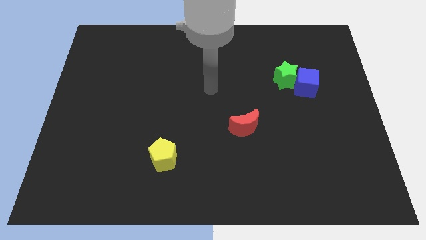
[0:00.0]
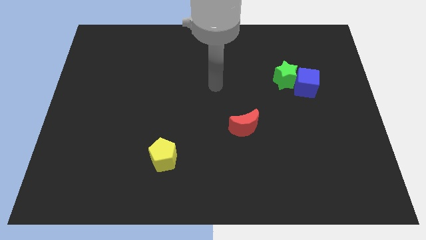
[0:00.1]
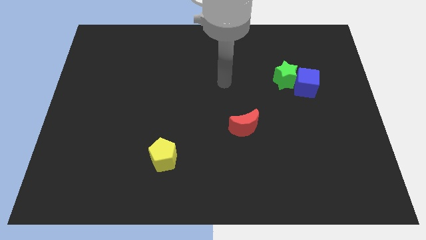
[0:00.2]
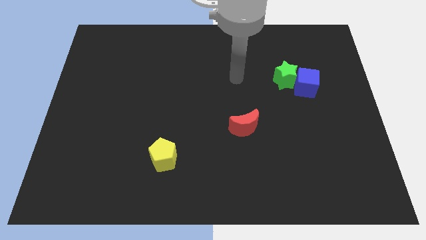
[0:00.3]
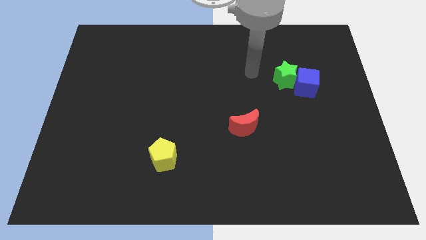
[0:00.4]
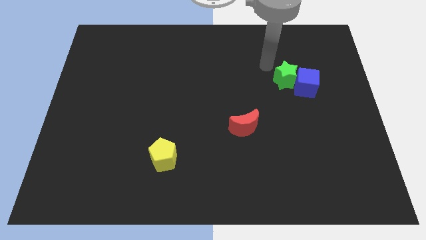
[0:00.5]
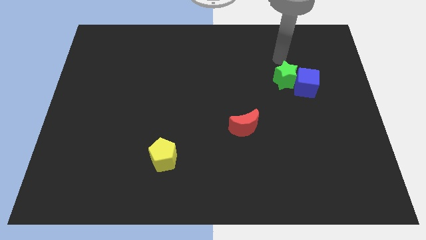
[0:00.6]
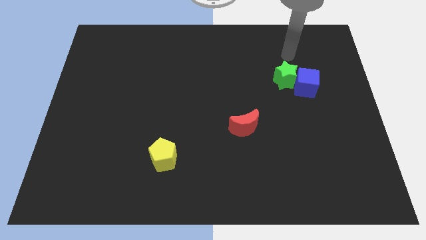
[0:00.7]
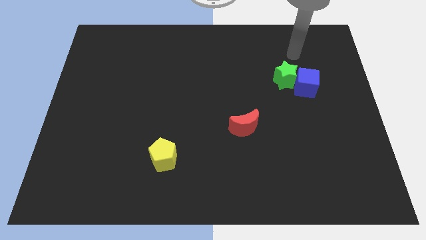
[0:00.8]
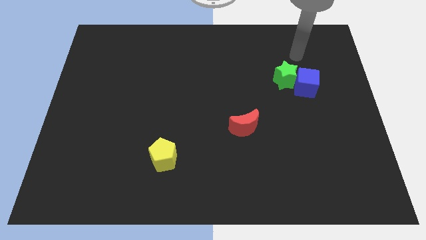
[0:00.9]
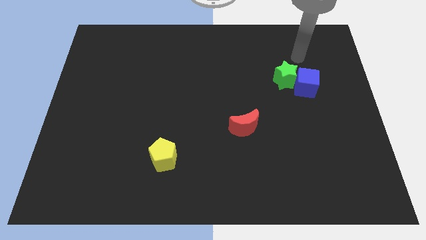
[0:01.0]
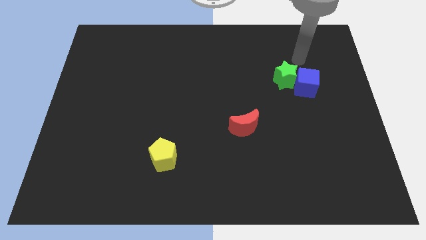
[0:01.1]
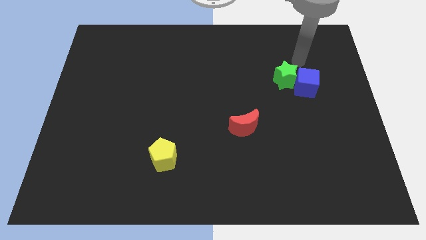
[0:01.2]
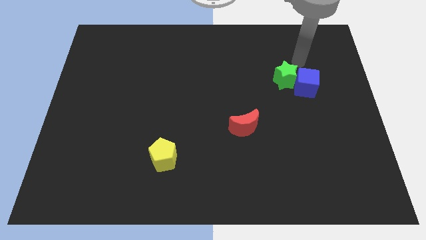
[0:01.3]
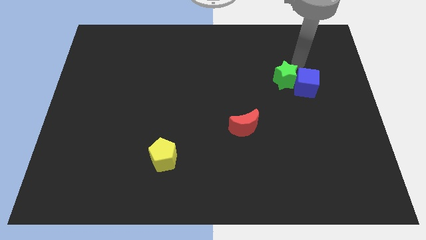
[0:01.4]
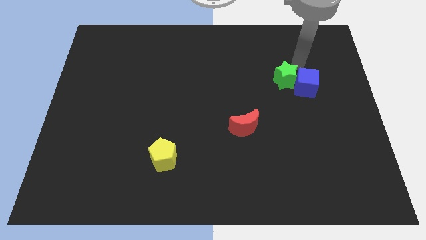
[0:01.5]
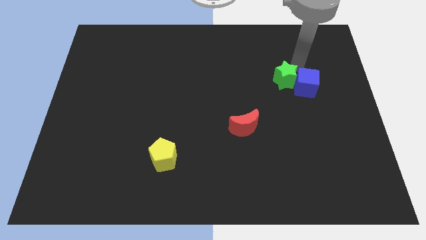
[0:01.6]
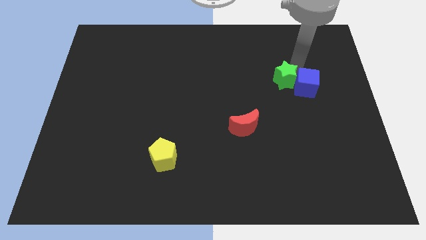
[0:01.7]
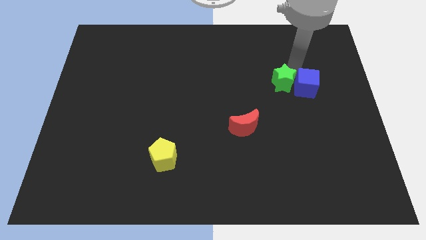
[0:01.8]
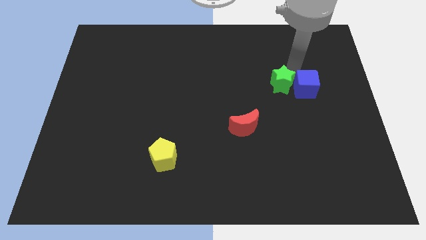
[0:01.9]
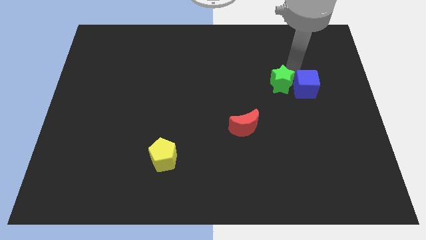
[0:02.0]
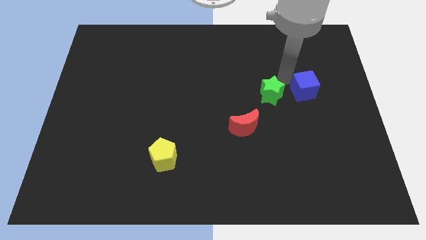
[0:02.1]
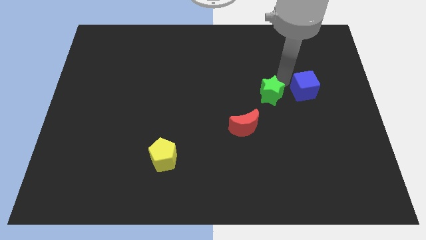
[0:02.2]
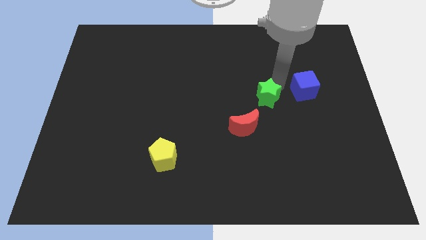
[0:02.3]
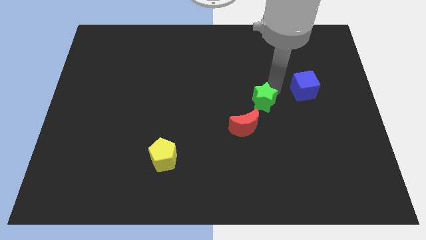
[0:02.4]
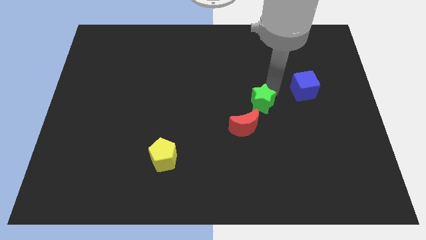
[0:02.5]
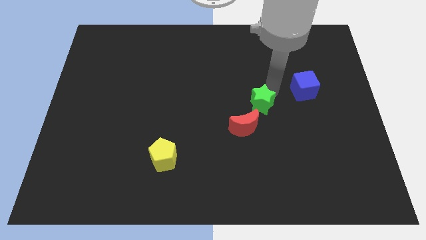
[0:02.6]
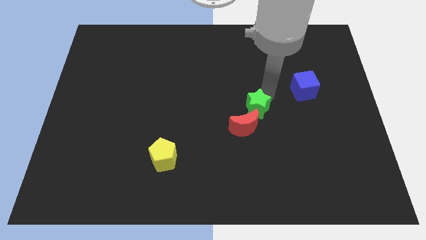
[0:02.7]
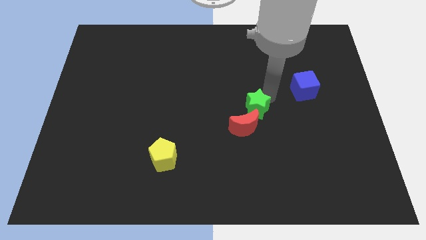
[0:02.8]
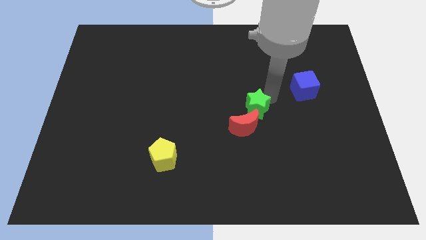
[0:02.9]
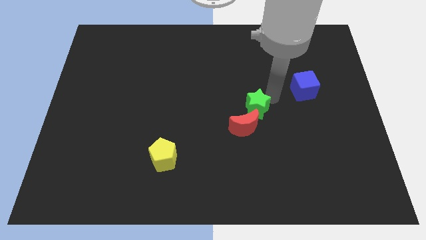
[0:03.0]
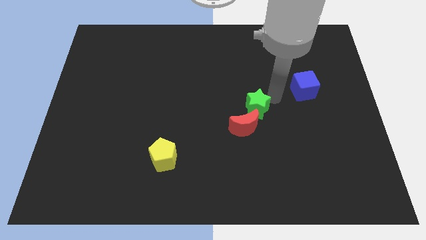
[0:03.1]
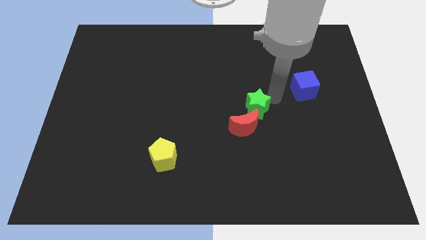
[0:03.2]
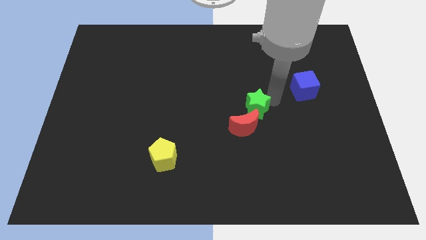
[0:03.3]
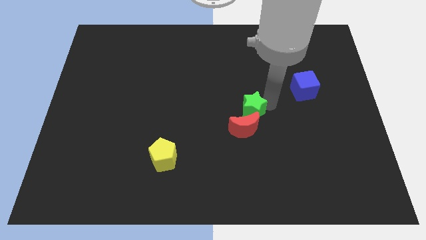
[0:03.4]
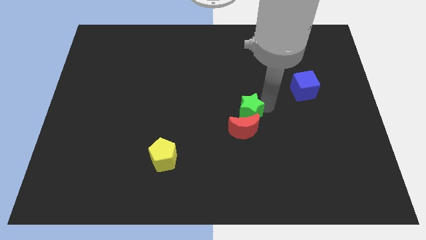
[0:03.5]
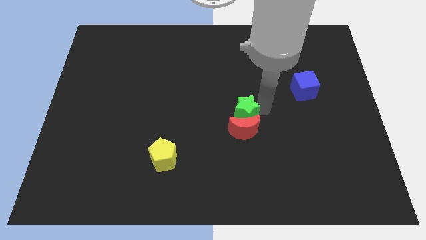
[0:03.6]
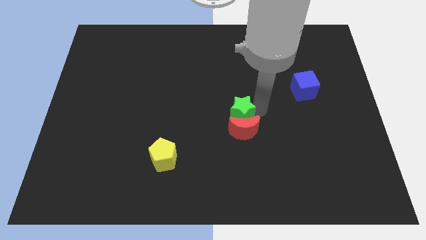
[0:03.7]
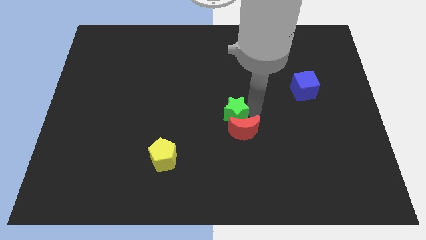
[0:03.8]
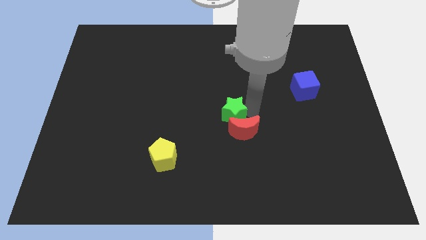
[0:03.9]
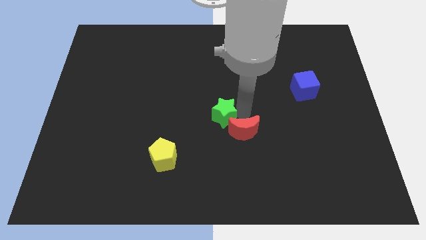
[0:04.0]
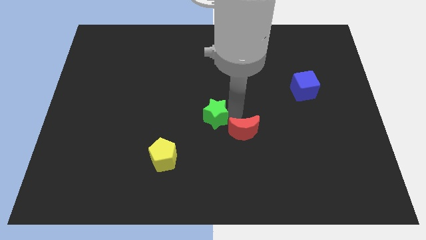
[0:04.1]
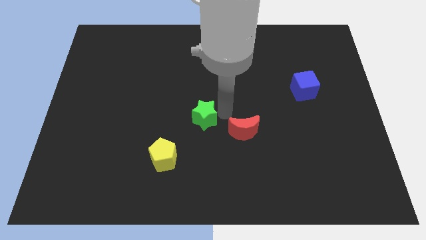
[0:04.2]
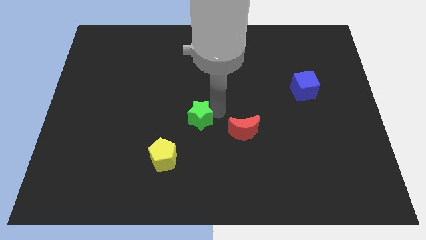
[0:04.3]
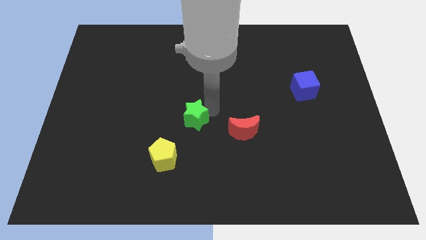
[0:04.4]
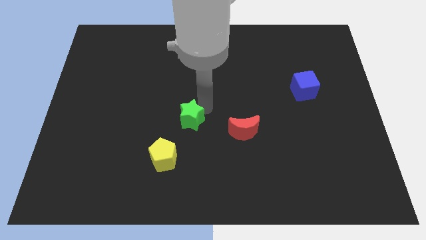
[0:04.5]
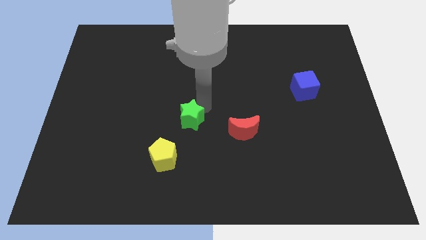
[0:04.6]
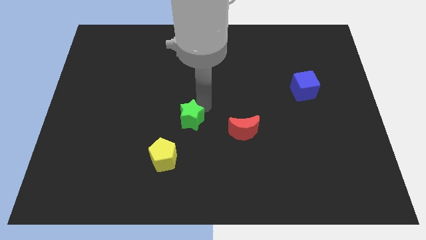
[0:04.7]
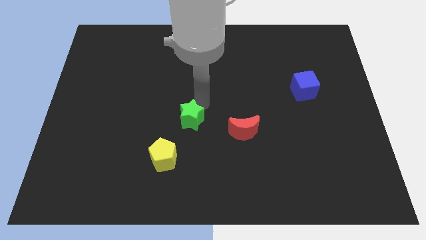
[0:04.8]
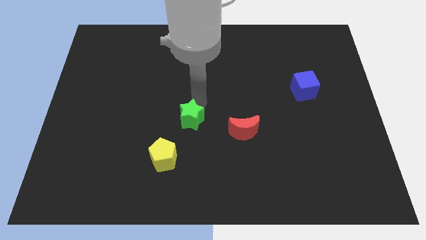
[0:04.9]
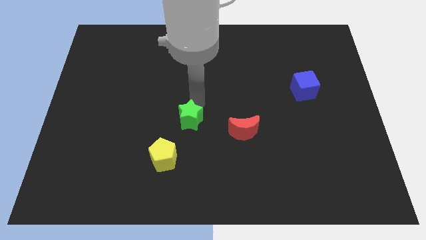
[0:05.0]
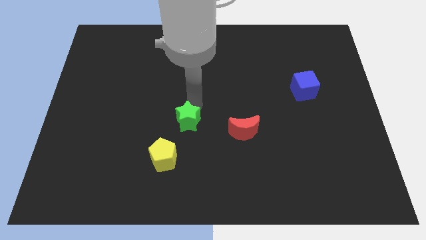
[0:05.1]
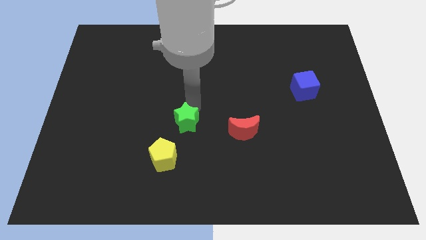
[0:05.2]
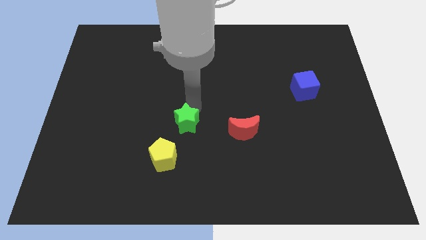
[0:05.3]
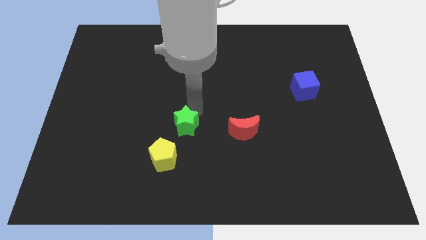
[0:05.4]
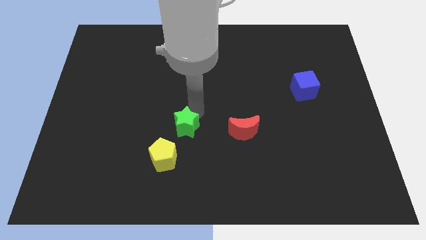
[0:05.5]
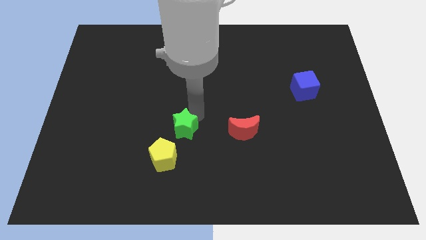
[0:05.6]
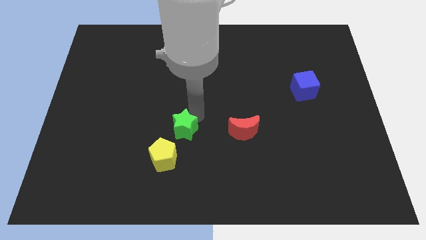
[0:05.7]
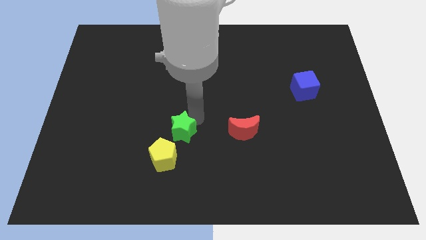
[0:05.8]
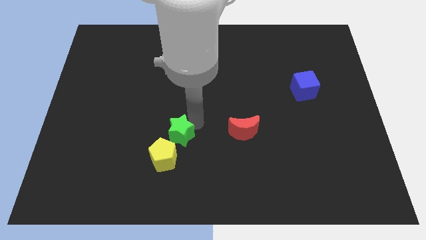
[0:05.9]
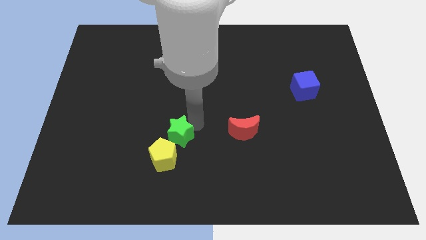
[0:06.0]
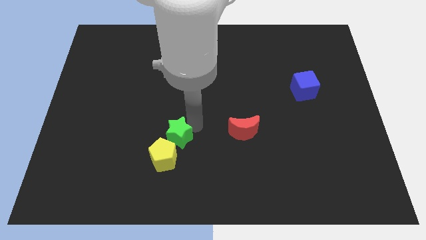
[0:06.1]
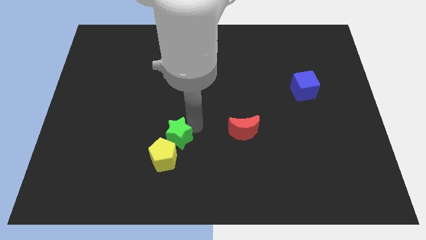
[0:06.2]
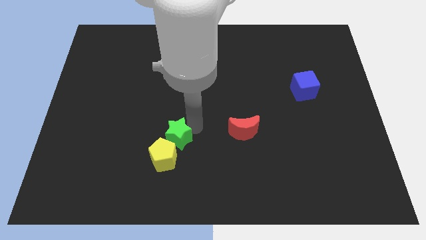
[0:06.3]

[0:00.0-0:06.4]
slide the green block to the yellow block

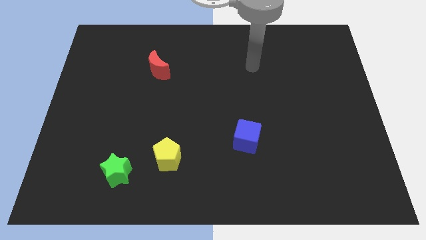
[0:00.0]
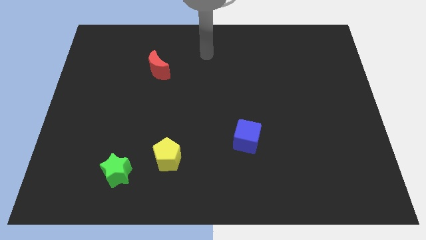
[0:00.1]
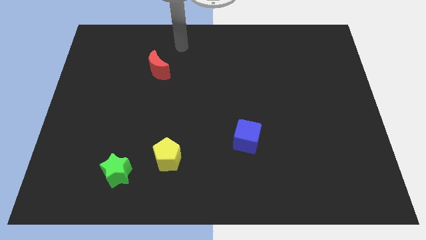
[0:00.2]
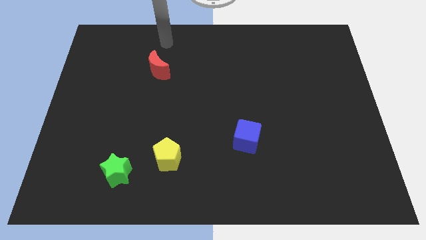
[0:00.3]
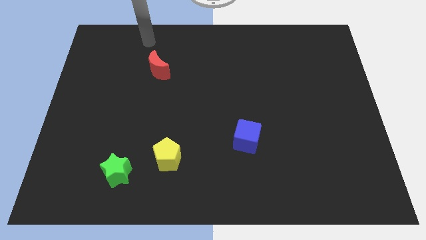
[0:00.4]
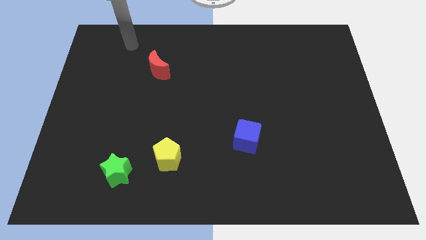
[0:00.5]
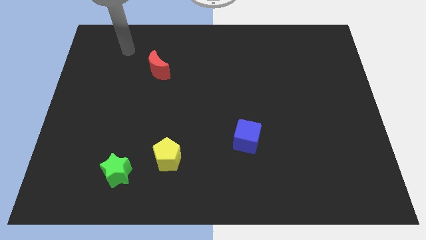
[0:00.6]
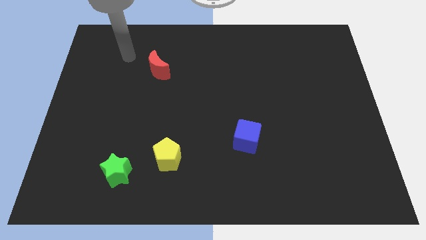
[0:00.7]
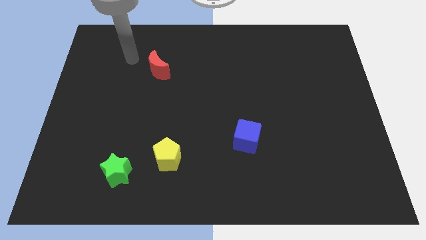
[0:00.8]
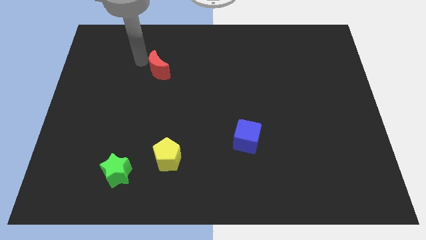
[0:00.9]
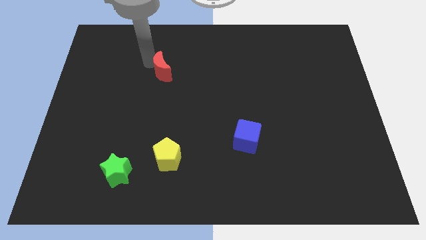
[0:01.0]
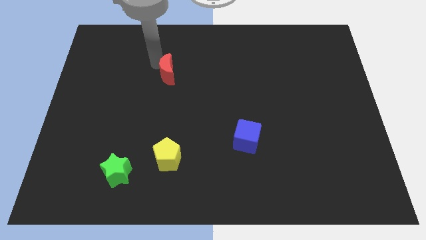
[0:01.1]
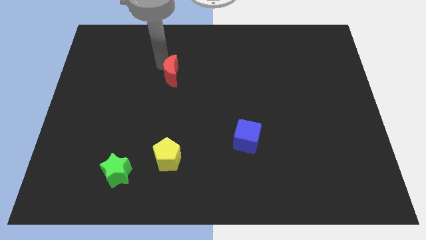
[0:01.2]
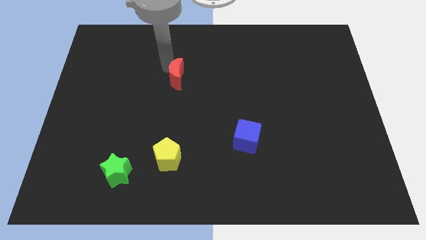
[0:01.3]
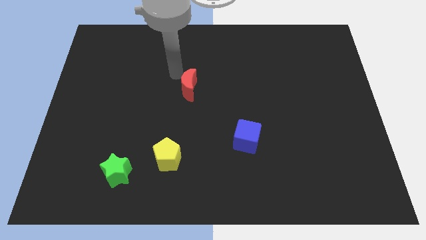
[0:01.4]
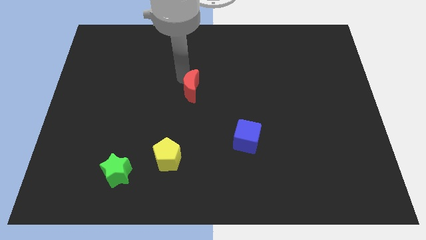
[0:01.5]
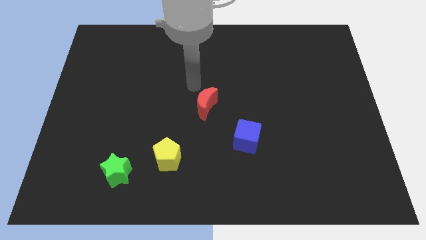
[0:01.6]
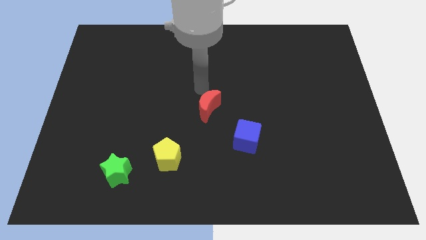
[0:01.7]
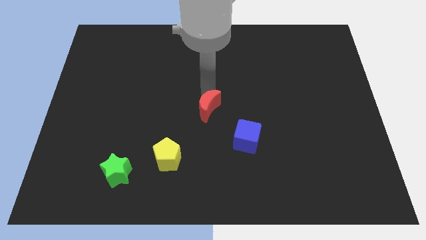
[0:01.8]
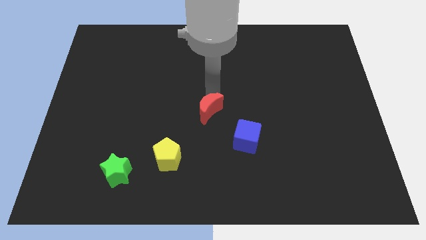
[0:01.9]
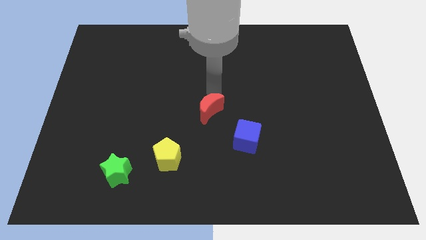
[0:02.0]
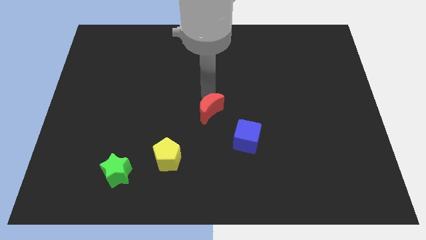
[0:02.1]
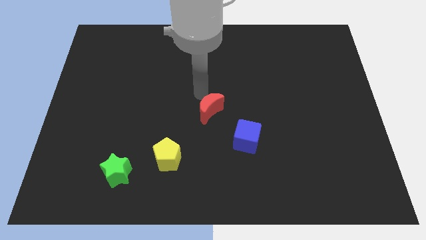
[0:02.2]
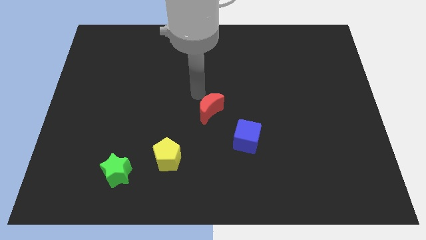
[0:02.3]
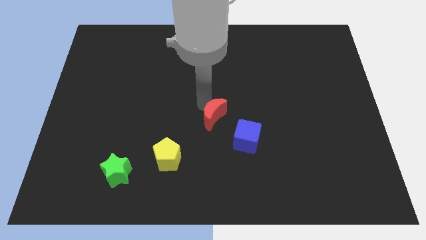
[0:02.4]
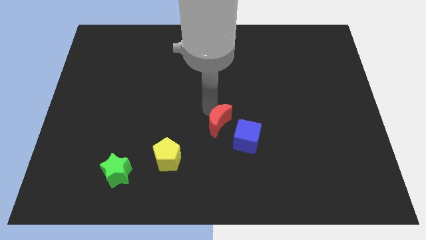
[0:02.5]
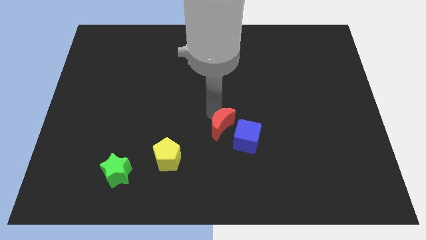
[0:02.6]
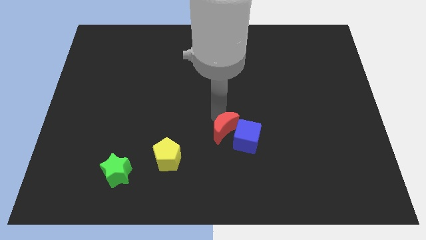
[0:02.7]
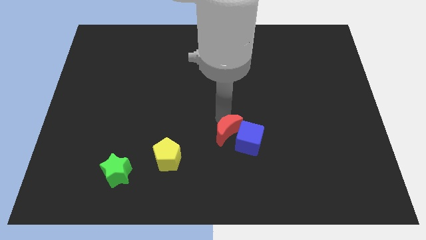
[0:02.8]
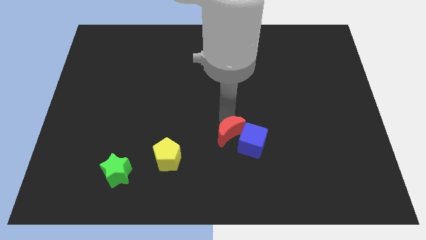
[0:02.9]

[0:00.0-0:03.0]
slide the red moon towards the blue block
